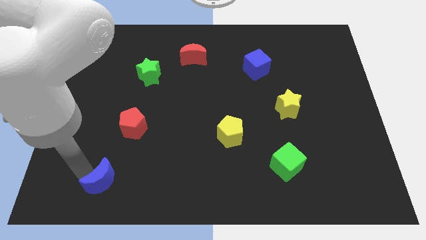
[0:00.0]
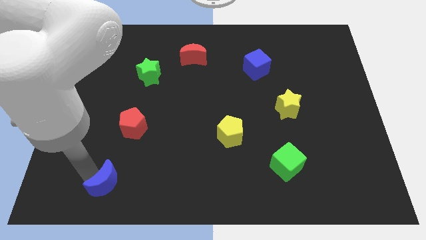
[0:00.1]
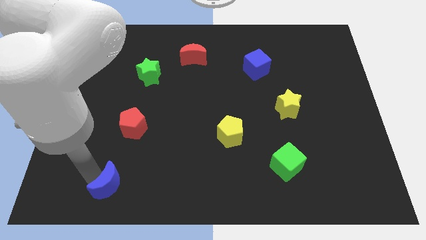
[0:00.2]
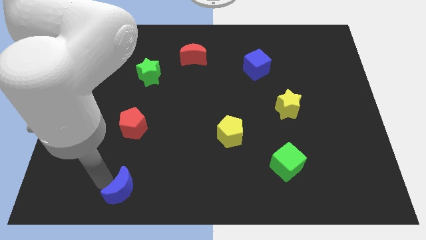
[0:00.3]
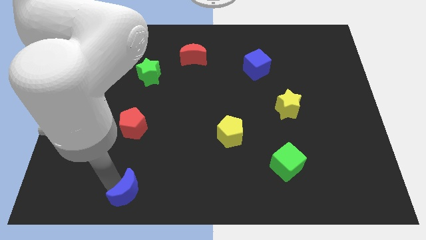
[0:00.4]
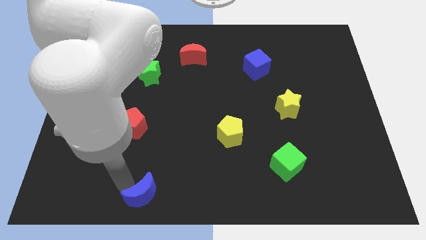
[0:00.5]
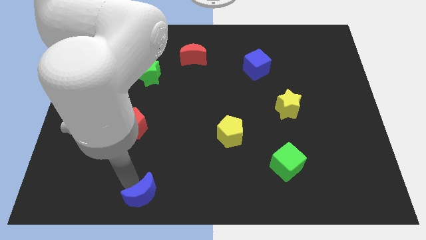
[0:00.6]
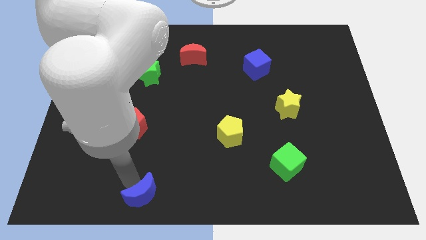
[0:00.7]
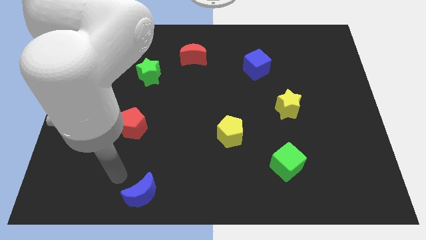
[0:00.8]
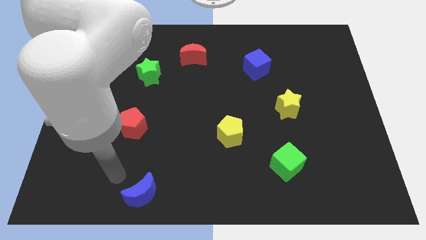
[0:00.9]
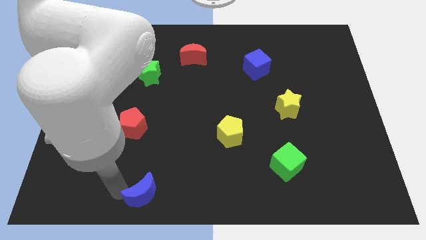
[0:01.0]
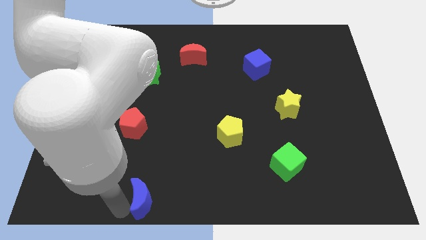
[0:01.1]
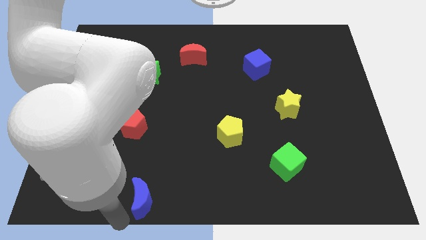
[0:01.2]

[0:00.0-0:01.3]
drag the blue moon to the bottom side

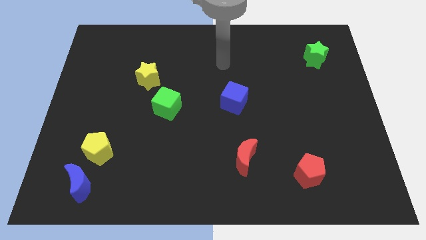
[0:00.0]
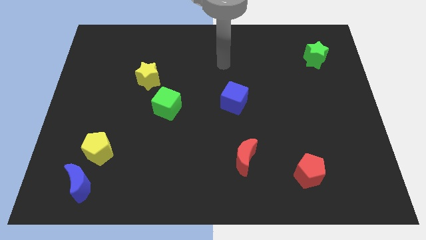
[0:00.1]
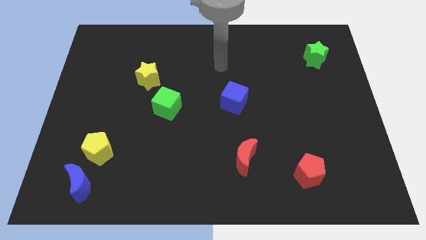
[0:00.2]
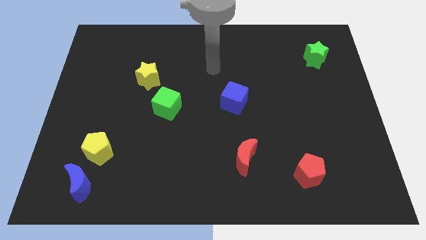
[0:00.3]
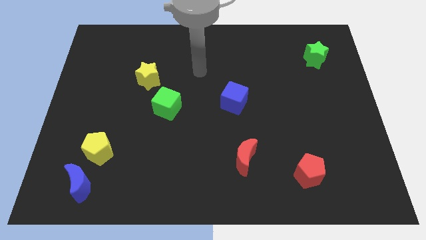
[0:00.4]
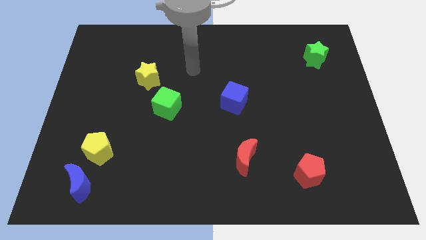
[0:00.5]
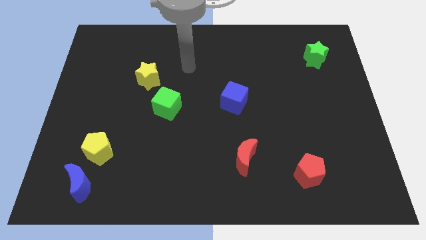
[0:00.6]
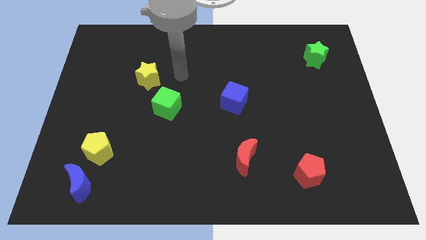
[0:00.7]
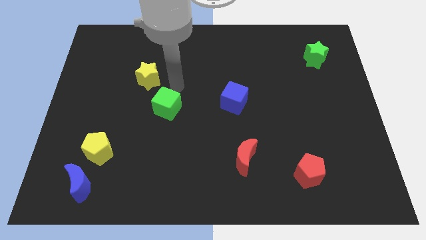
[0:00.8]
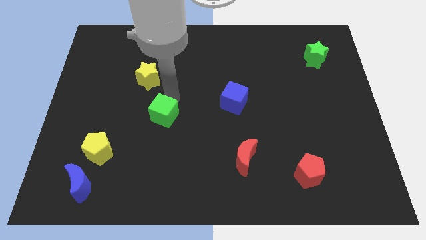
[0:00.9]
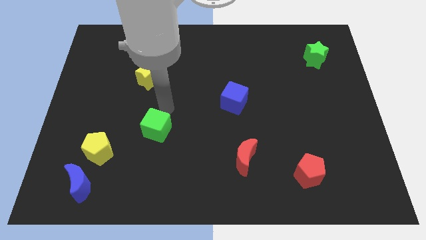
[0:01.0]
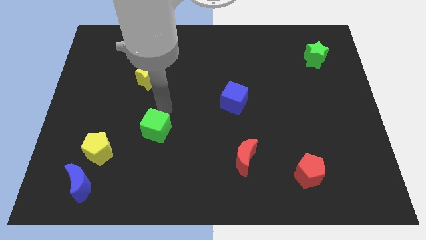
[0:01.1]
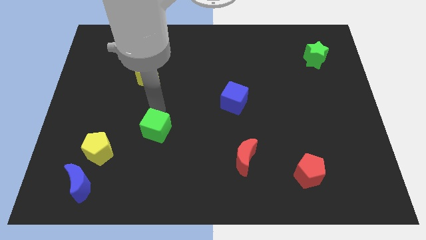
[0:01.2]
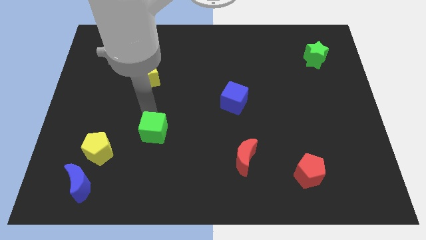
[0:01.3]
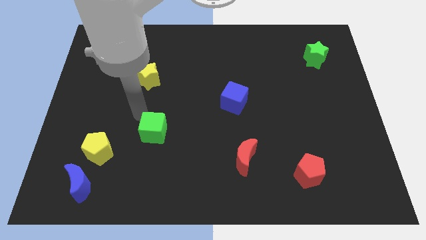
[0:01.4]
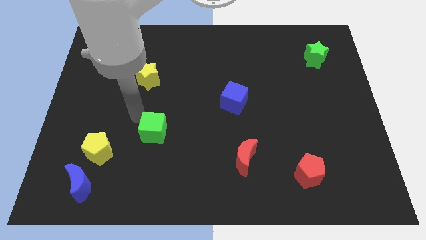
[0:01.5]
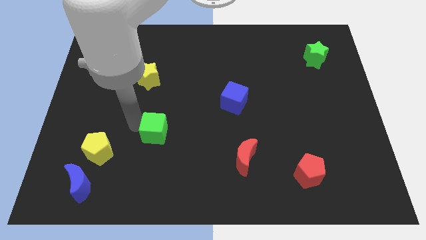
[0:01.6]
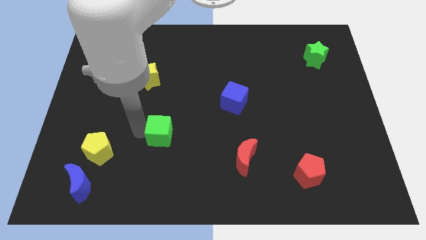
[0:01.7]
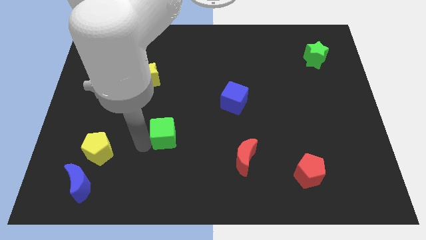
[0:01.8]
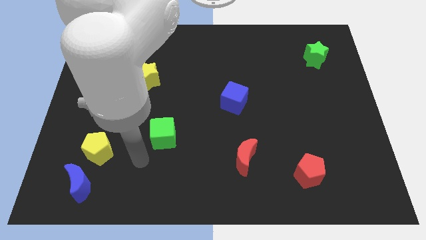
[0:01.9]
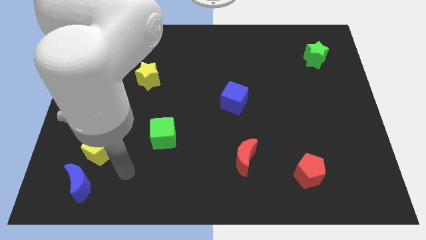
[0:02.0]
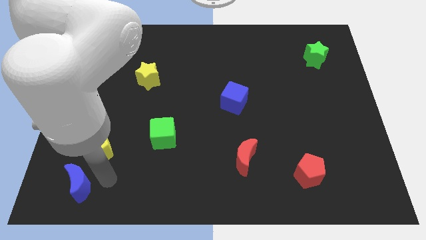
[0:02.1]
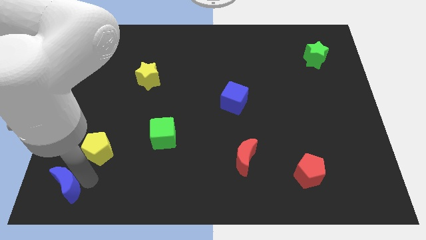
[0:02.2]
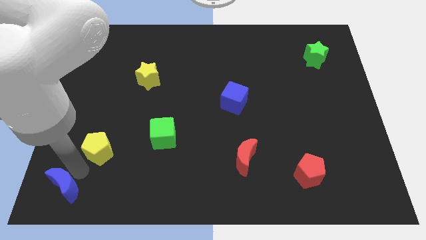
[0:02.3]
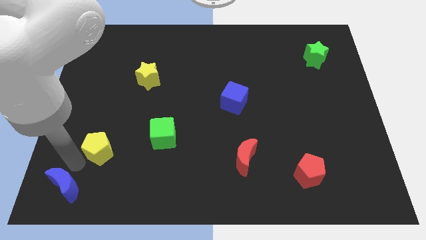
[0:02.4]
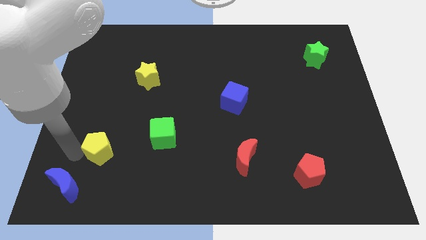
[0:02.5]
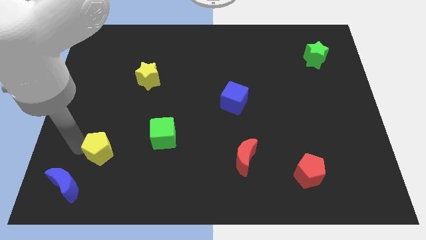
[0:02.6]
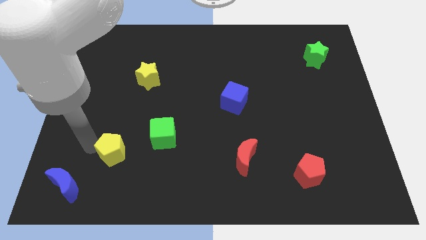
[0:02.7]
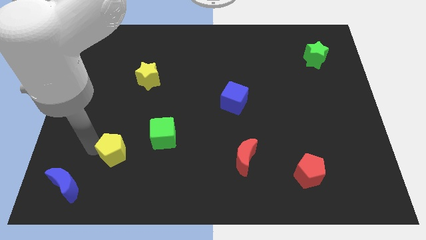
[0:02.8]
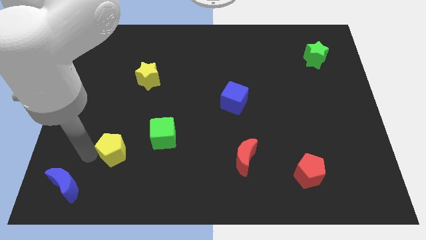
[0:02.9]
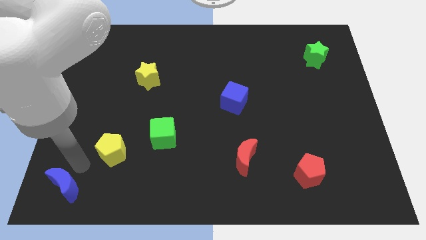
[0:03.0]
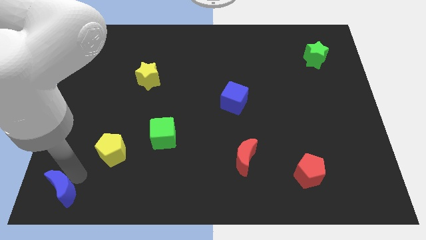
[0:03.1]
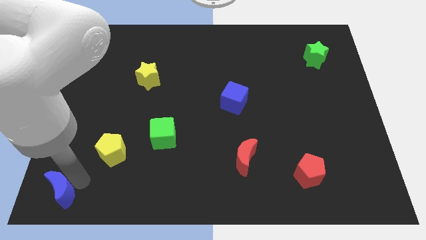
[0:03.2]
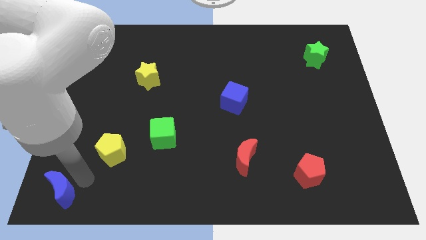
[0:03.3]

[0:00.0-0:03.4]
place the green cube parallel to the yellow pentagon

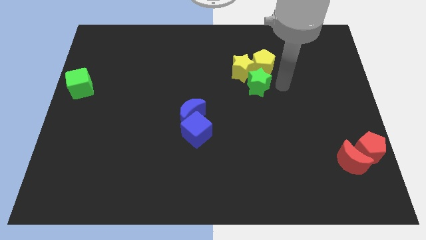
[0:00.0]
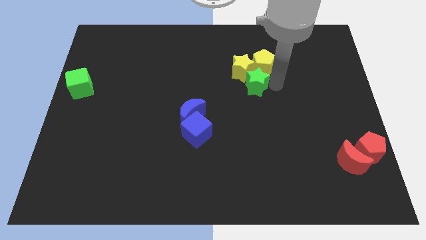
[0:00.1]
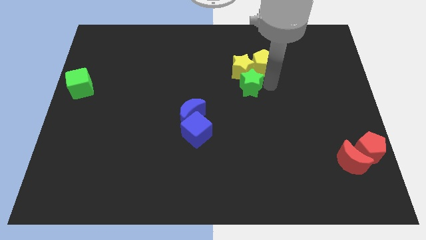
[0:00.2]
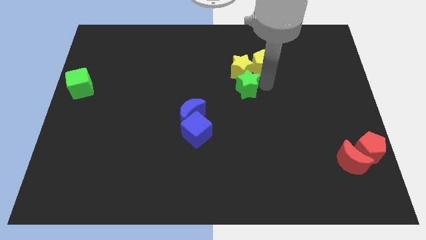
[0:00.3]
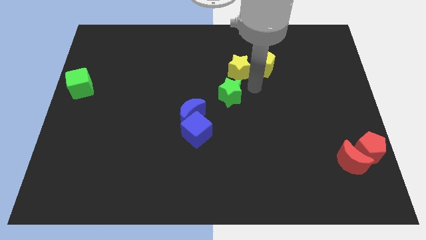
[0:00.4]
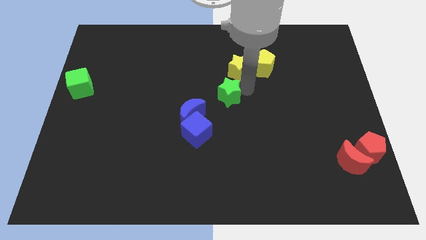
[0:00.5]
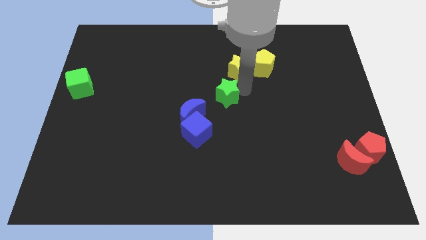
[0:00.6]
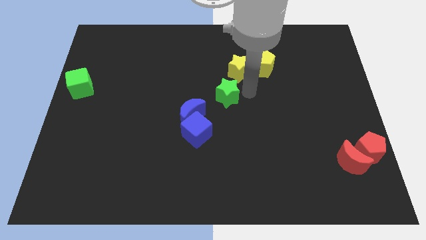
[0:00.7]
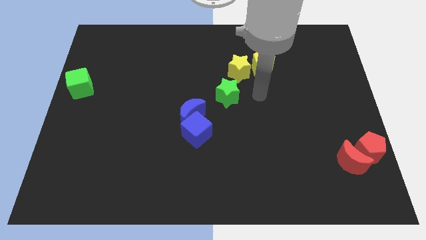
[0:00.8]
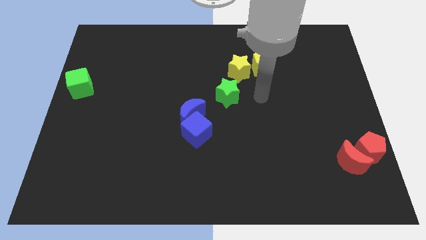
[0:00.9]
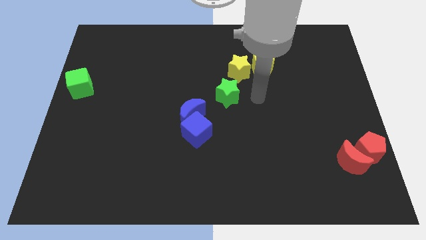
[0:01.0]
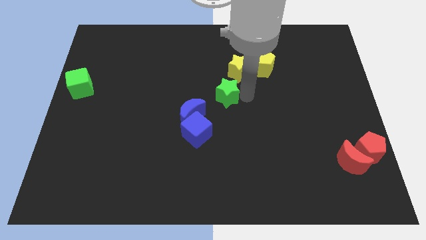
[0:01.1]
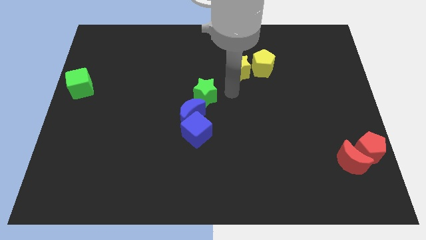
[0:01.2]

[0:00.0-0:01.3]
put the green star above the blue crescent

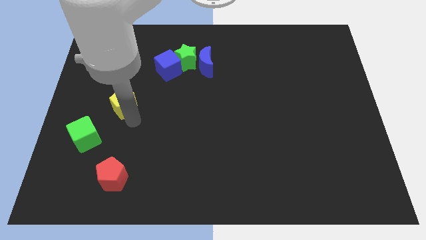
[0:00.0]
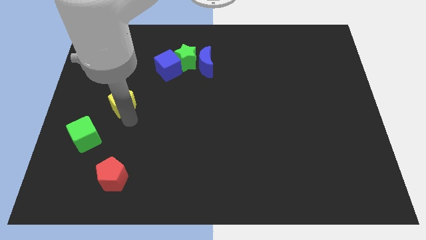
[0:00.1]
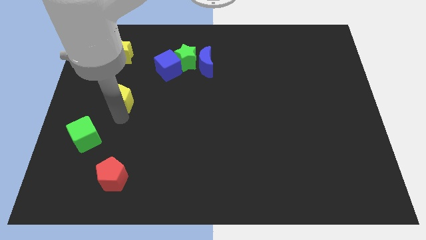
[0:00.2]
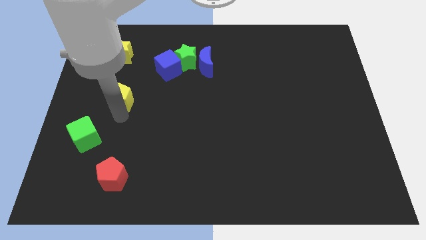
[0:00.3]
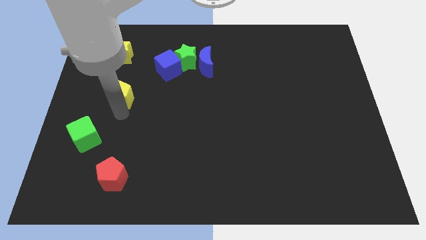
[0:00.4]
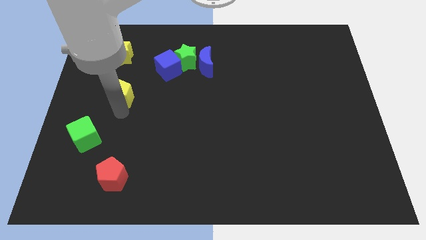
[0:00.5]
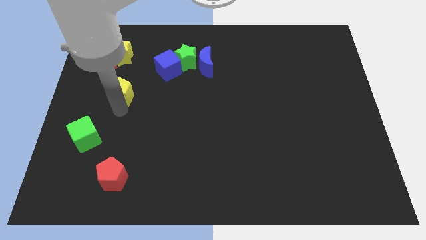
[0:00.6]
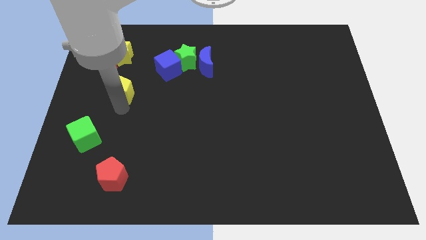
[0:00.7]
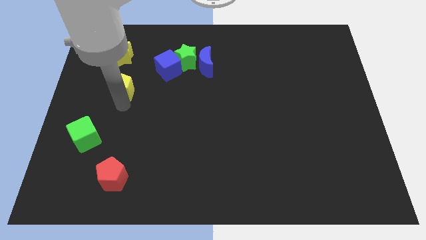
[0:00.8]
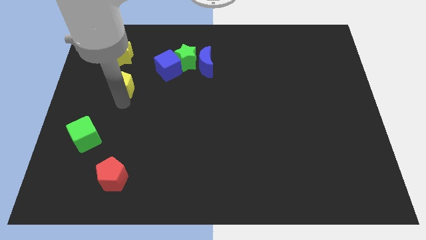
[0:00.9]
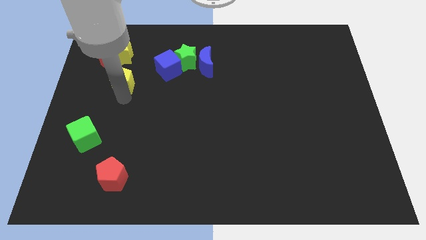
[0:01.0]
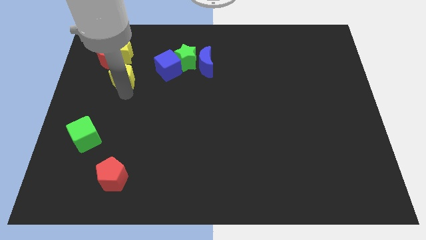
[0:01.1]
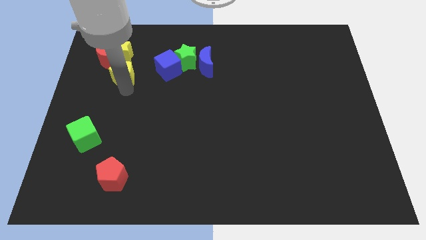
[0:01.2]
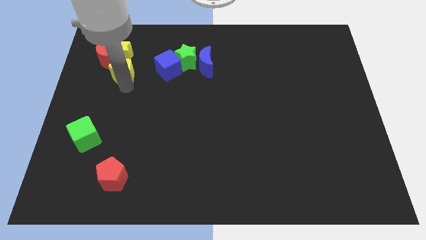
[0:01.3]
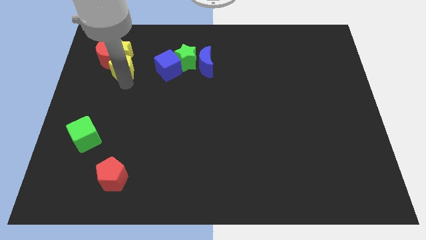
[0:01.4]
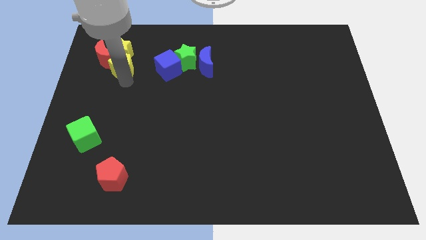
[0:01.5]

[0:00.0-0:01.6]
take the yellow pentagon into the bottom side of the yellow star

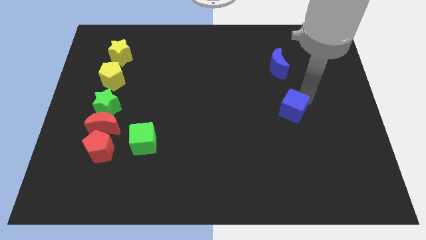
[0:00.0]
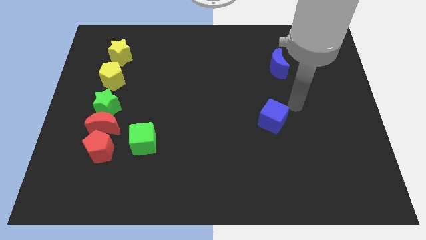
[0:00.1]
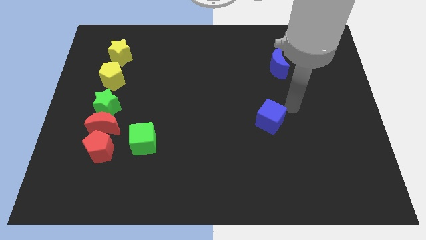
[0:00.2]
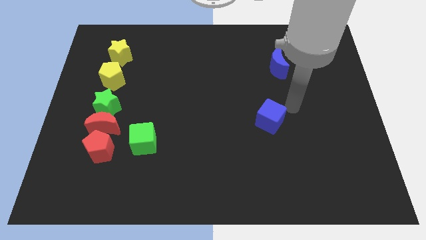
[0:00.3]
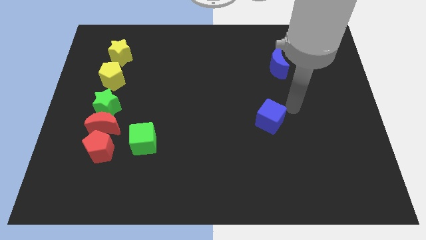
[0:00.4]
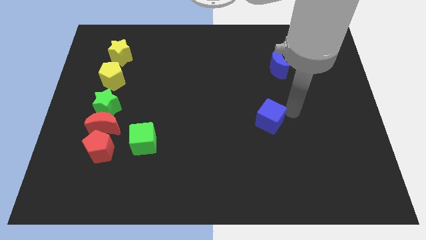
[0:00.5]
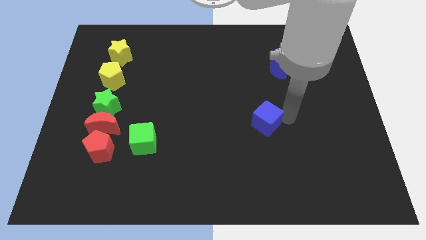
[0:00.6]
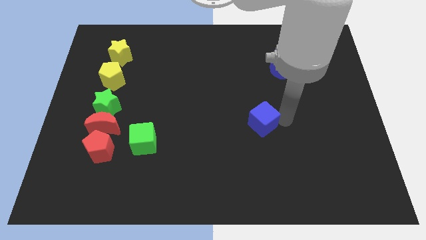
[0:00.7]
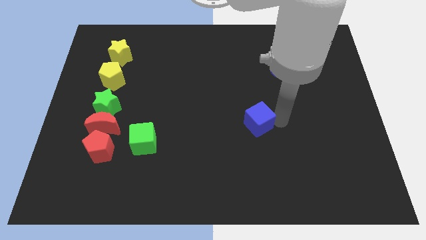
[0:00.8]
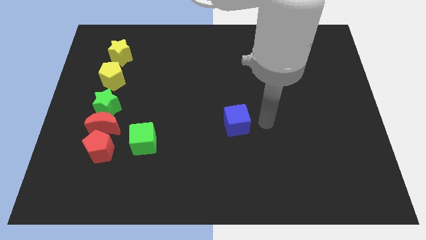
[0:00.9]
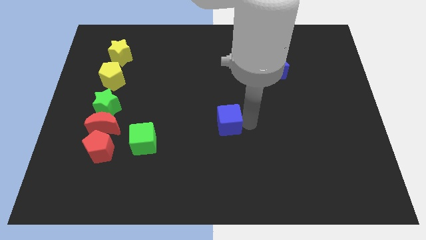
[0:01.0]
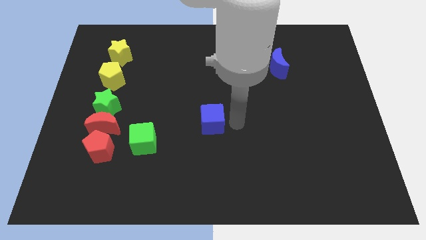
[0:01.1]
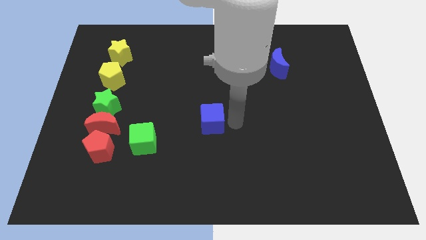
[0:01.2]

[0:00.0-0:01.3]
place the blue cube at the center of the board
